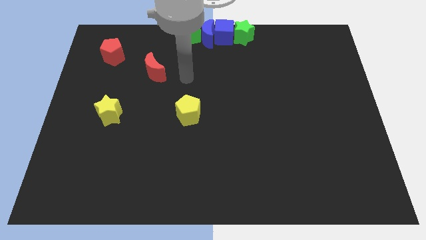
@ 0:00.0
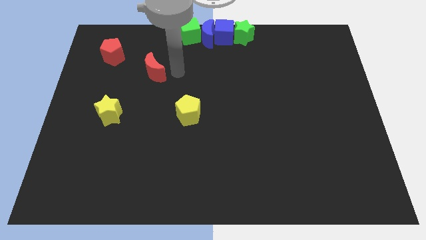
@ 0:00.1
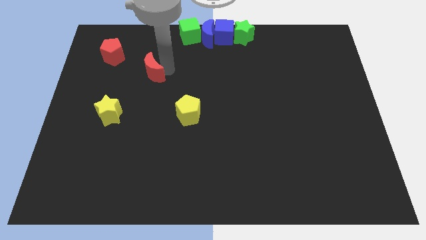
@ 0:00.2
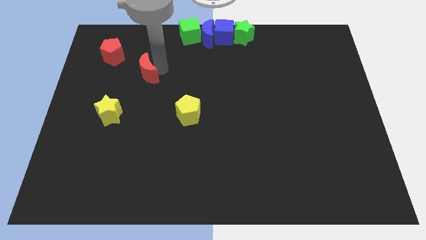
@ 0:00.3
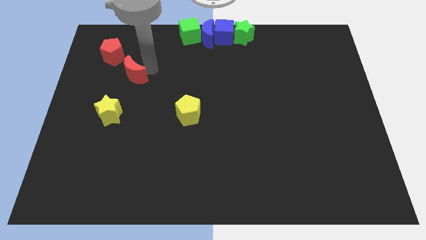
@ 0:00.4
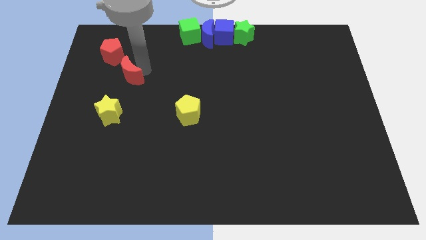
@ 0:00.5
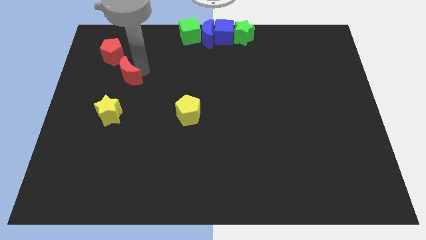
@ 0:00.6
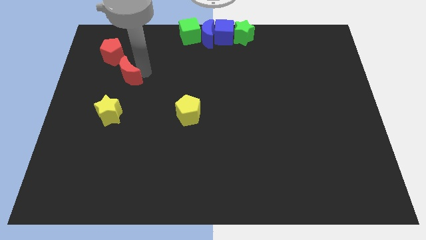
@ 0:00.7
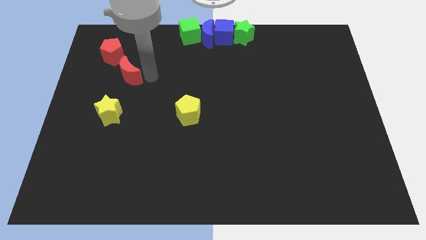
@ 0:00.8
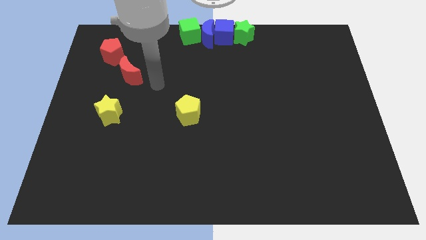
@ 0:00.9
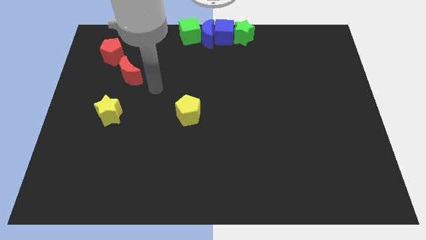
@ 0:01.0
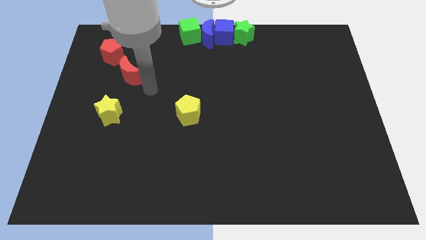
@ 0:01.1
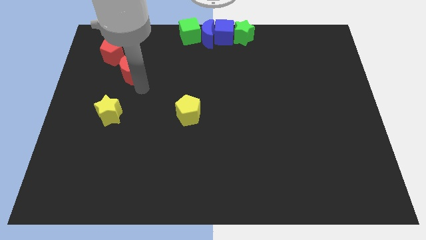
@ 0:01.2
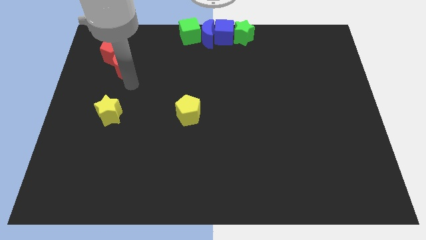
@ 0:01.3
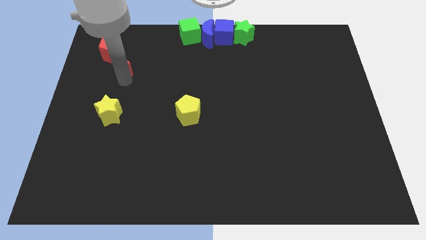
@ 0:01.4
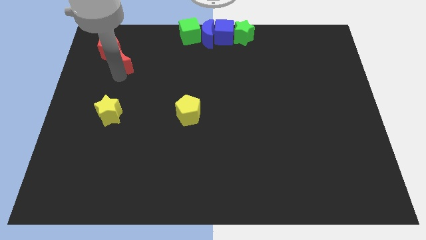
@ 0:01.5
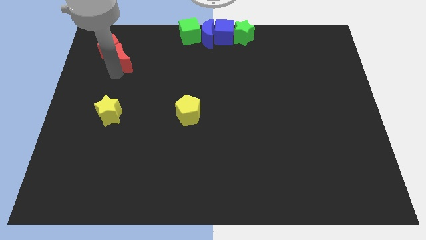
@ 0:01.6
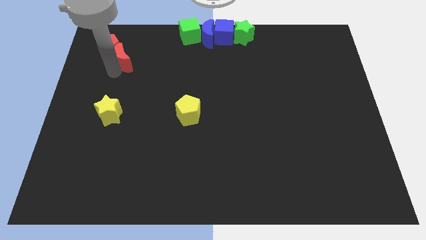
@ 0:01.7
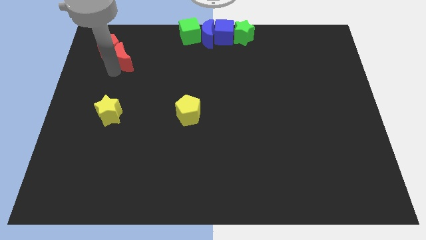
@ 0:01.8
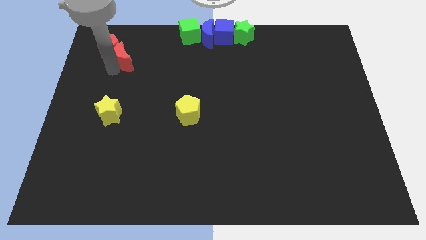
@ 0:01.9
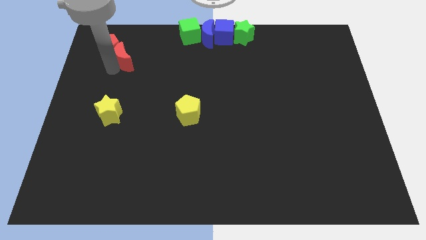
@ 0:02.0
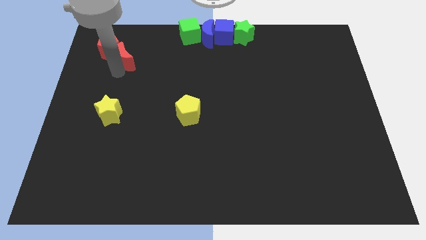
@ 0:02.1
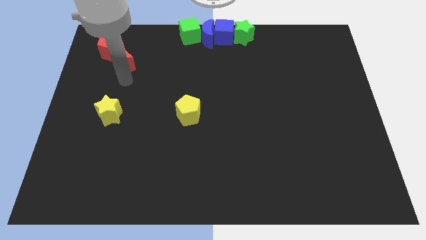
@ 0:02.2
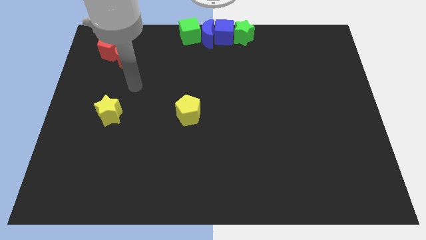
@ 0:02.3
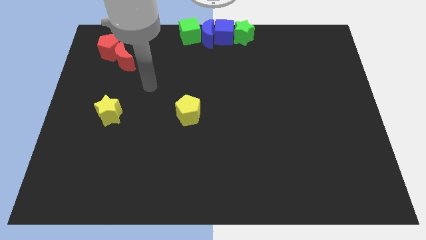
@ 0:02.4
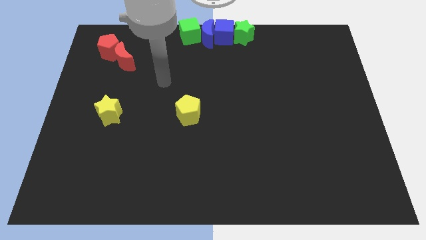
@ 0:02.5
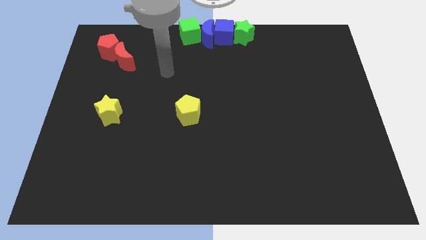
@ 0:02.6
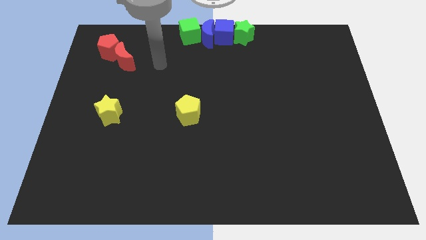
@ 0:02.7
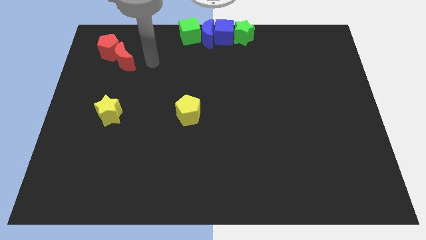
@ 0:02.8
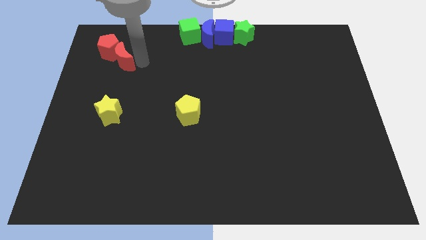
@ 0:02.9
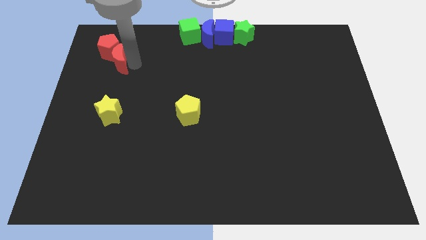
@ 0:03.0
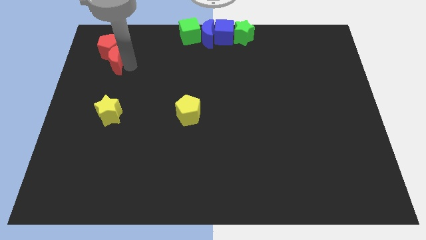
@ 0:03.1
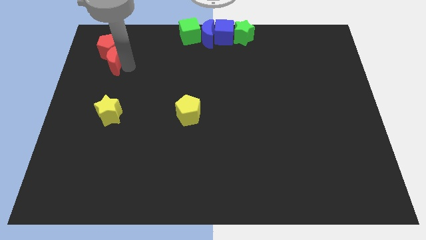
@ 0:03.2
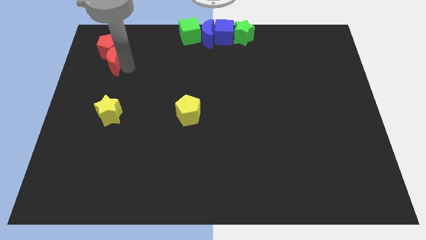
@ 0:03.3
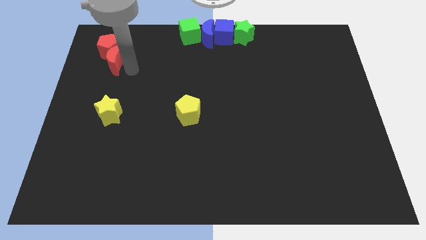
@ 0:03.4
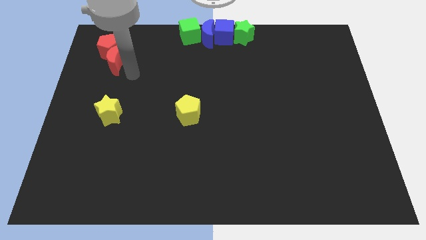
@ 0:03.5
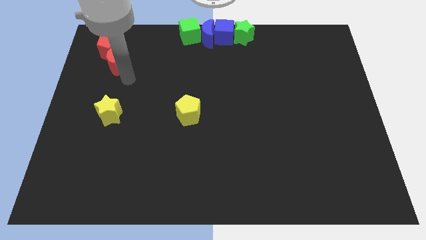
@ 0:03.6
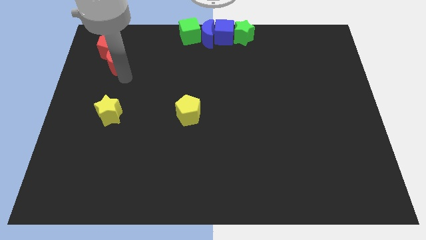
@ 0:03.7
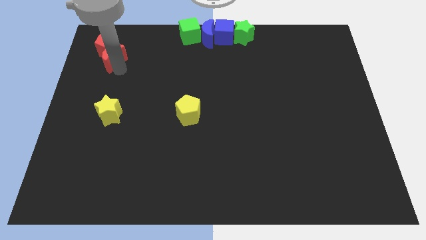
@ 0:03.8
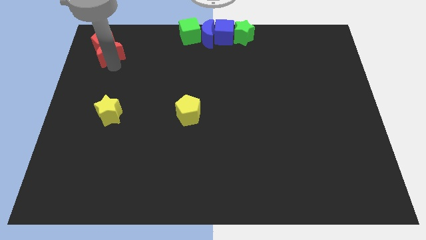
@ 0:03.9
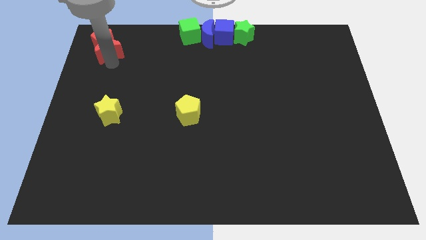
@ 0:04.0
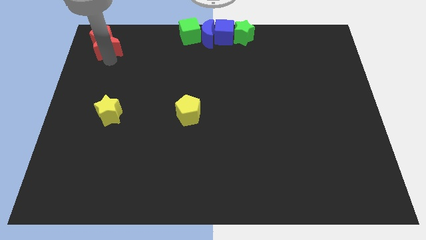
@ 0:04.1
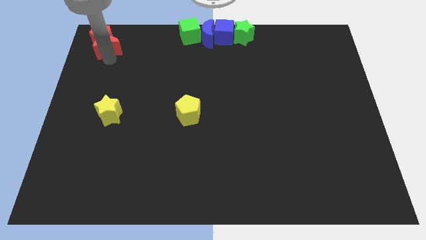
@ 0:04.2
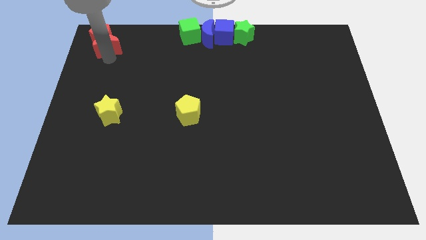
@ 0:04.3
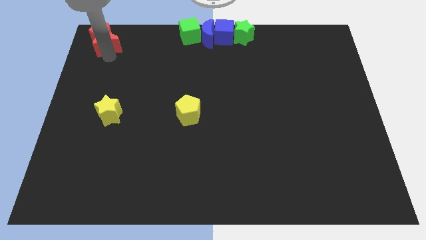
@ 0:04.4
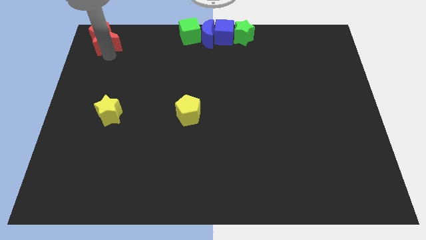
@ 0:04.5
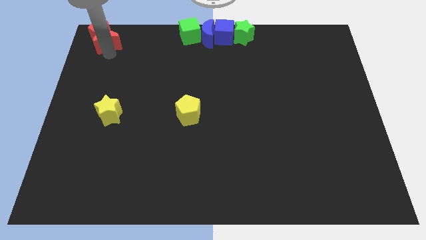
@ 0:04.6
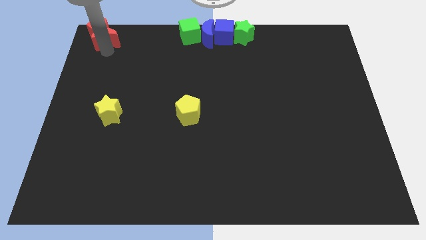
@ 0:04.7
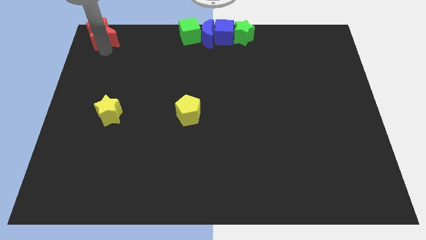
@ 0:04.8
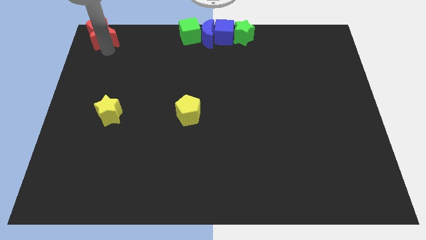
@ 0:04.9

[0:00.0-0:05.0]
push the red blocks to the top left corner of the board

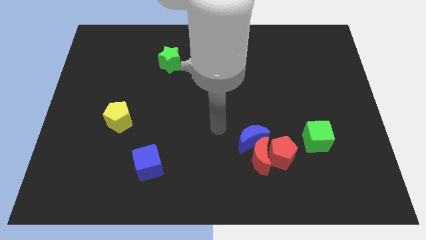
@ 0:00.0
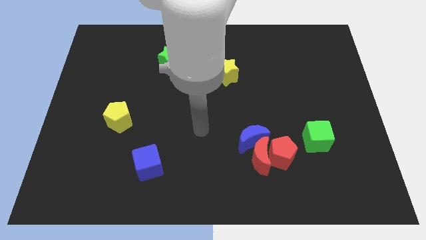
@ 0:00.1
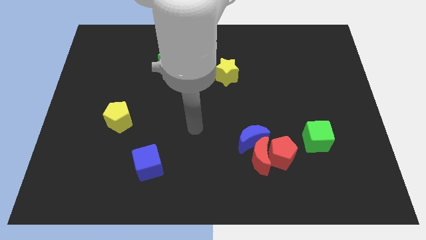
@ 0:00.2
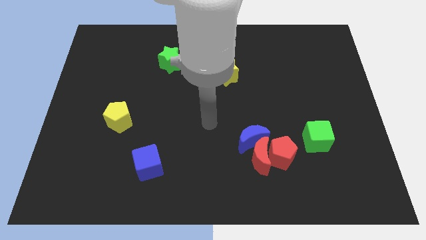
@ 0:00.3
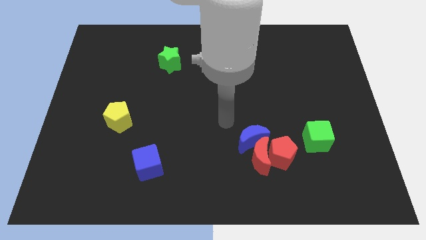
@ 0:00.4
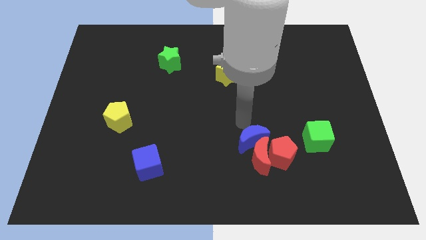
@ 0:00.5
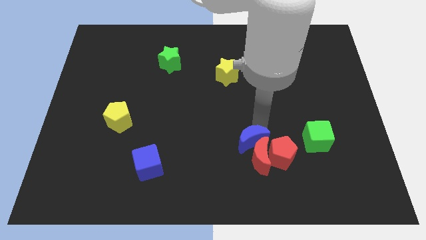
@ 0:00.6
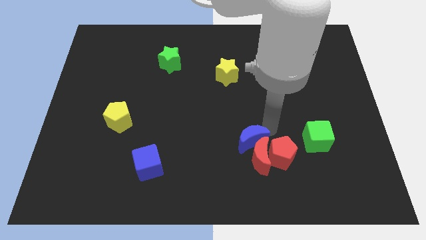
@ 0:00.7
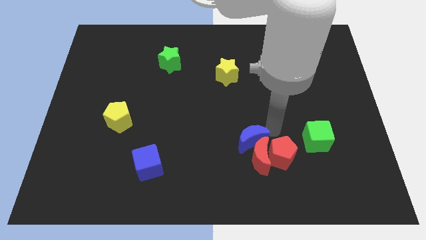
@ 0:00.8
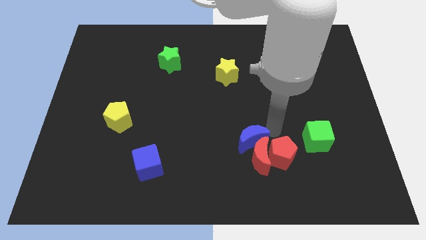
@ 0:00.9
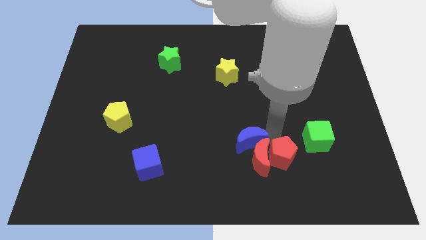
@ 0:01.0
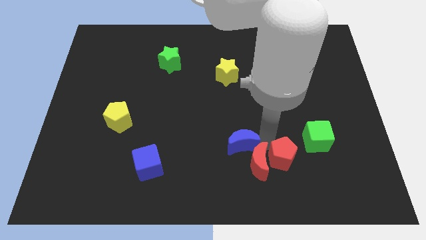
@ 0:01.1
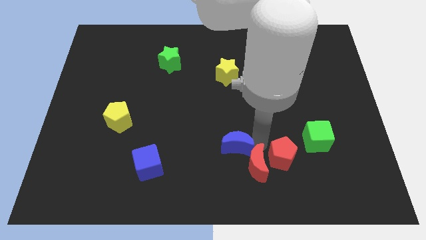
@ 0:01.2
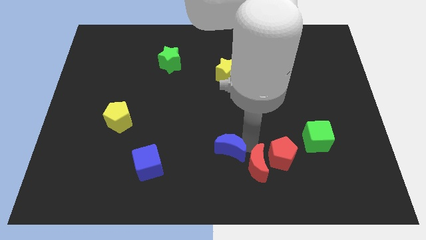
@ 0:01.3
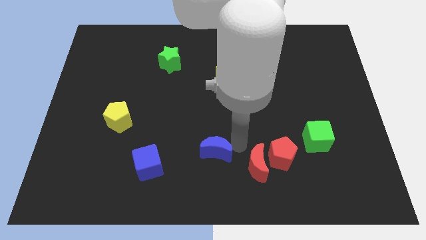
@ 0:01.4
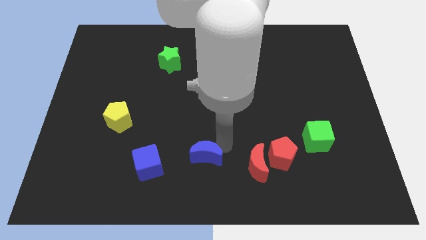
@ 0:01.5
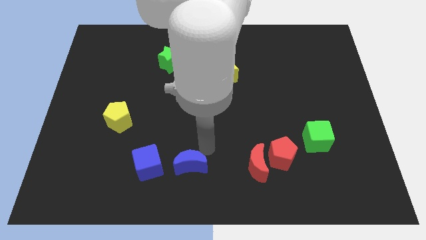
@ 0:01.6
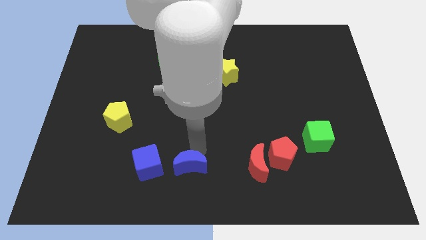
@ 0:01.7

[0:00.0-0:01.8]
separate blue moon to the right of blue cube

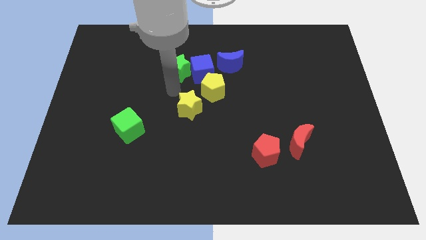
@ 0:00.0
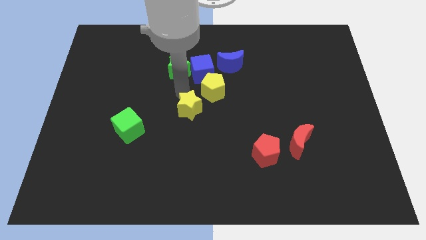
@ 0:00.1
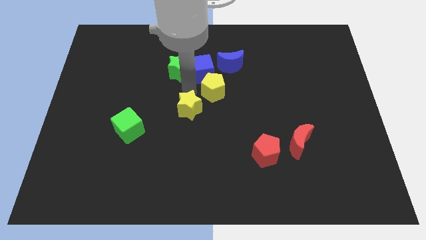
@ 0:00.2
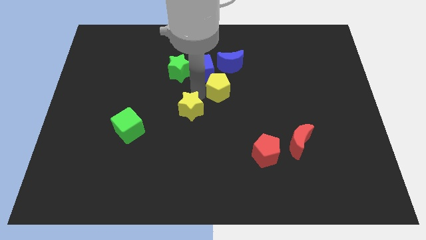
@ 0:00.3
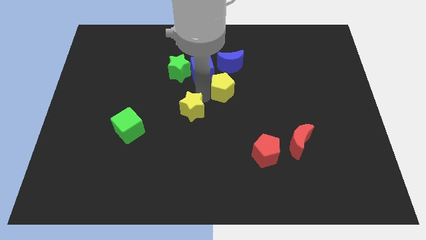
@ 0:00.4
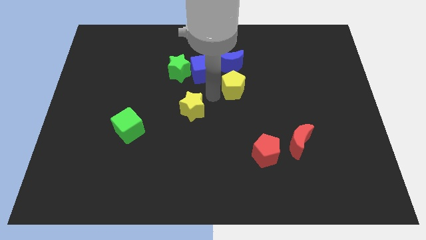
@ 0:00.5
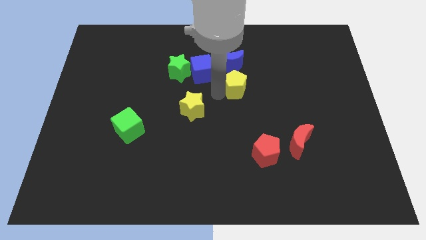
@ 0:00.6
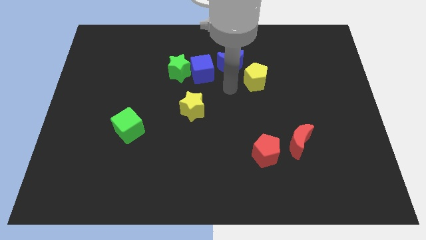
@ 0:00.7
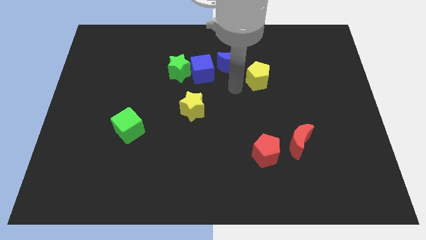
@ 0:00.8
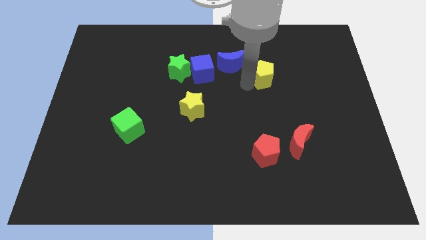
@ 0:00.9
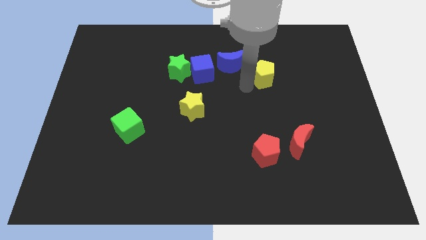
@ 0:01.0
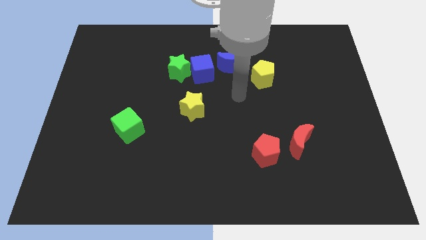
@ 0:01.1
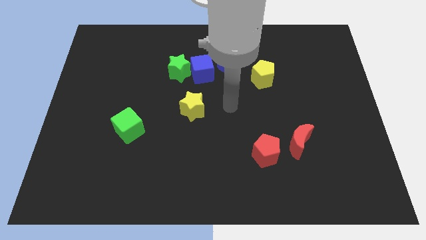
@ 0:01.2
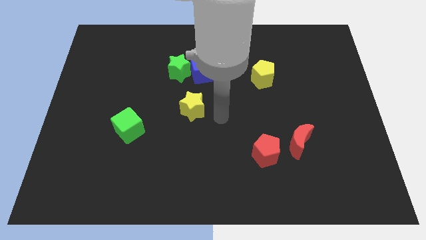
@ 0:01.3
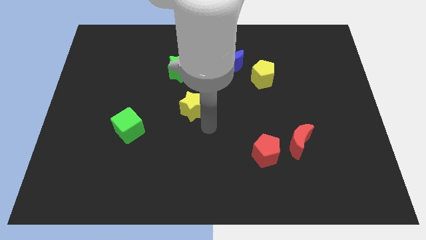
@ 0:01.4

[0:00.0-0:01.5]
separate the yellow pentagon from yellow star

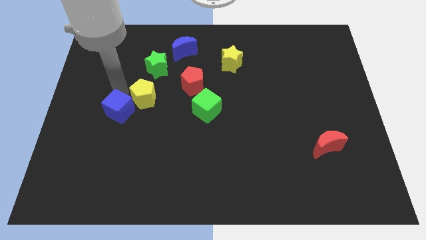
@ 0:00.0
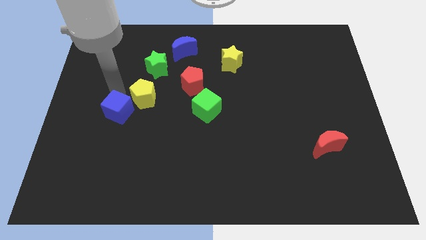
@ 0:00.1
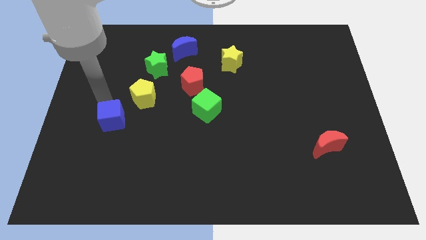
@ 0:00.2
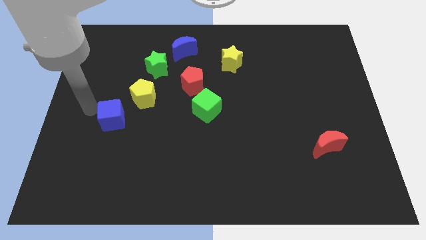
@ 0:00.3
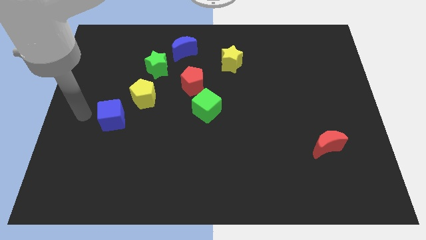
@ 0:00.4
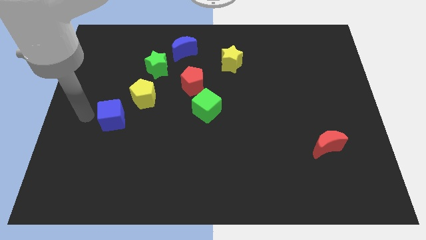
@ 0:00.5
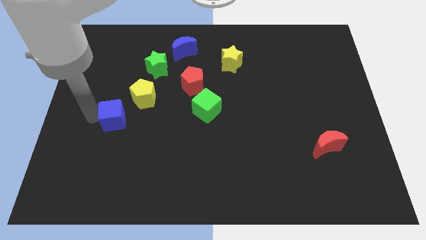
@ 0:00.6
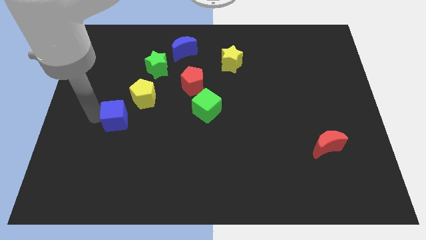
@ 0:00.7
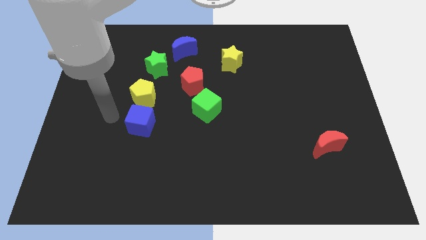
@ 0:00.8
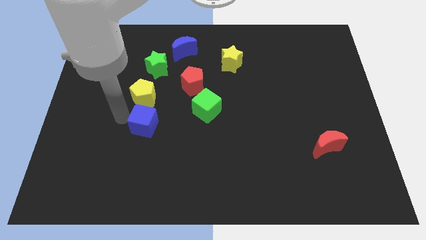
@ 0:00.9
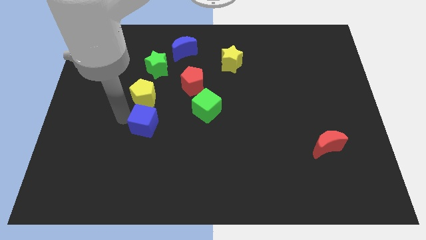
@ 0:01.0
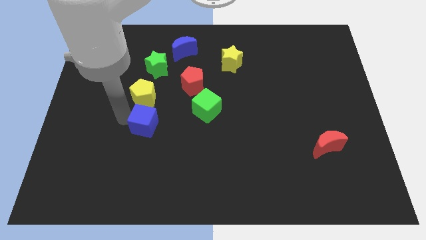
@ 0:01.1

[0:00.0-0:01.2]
push the blue cube down to the yellow pentagon
